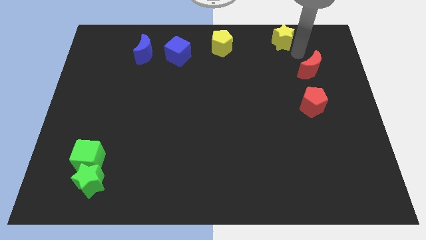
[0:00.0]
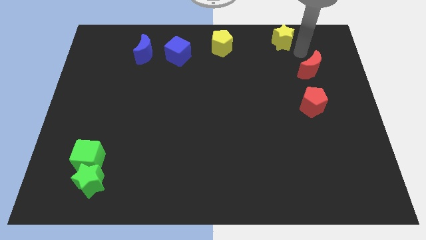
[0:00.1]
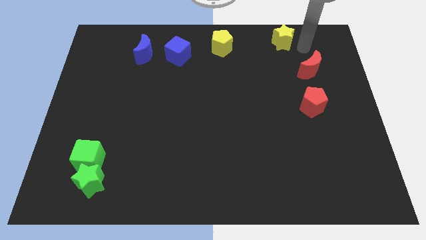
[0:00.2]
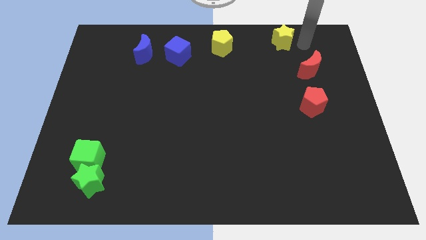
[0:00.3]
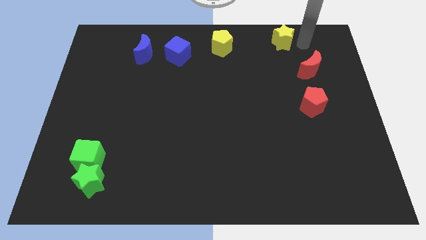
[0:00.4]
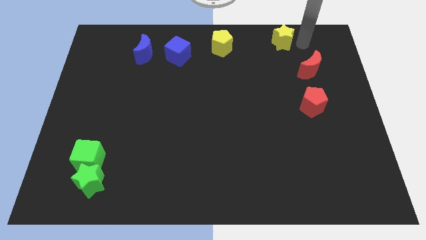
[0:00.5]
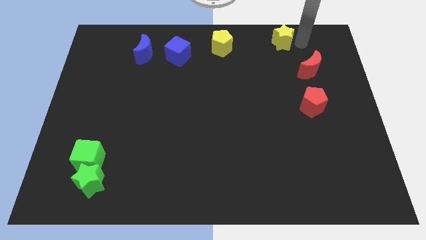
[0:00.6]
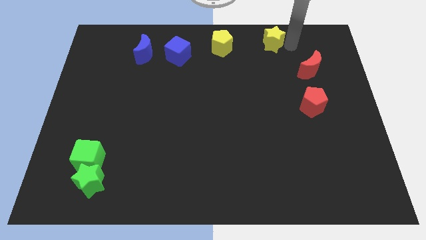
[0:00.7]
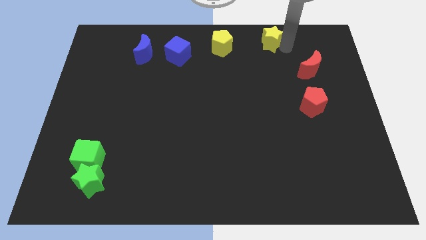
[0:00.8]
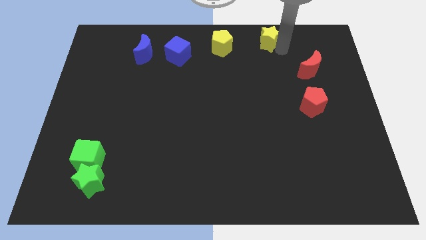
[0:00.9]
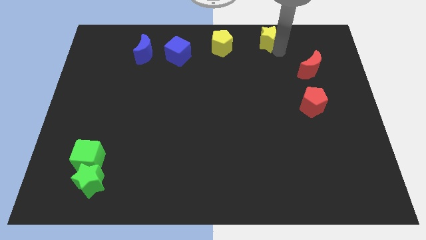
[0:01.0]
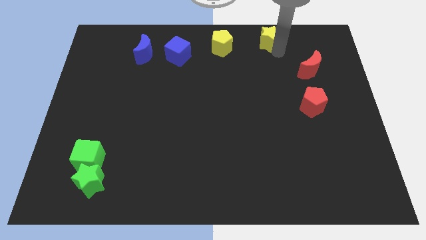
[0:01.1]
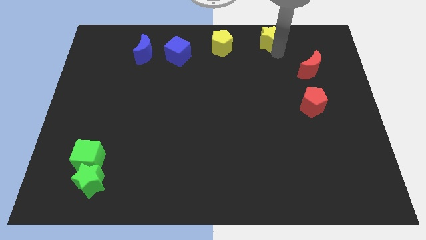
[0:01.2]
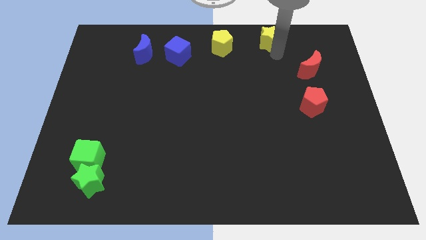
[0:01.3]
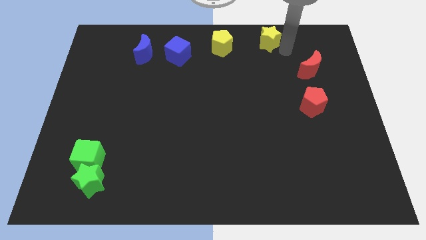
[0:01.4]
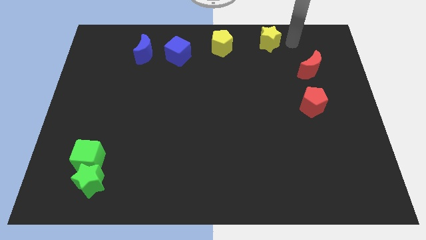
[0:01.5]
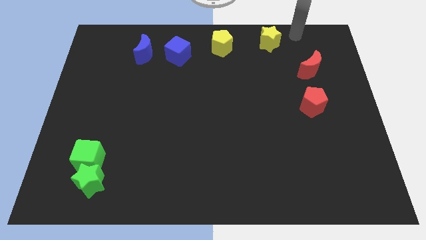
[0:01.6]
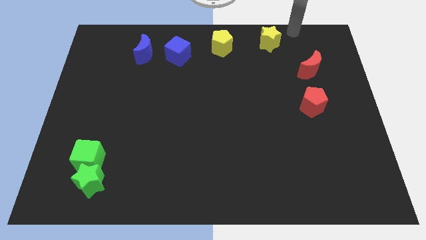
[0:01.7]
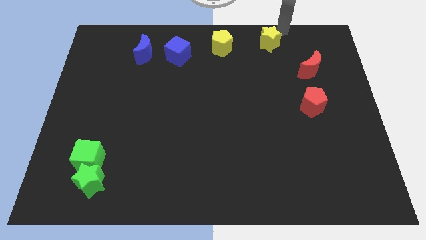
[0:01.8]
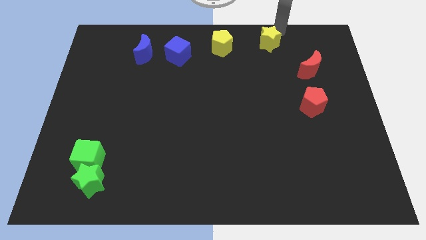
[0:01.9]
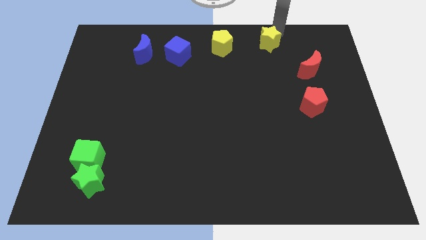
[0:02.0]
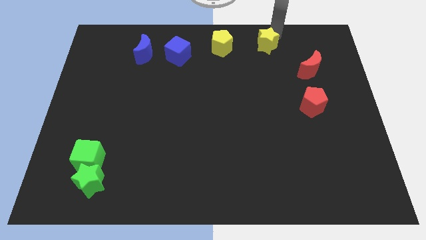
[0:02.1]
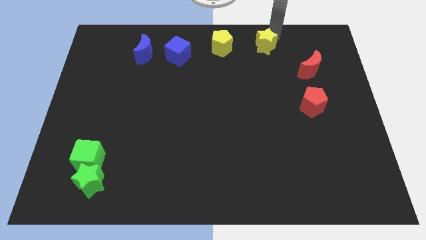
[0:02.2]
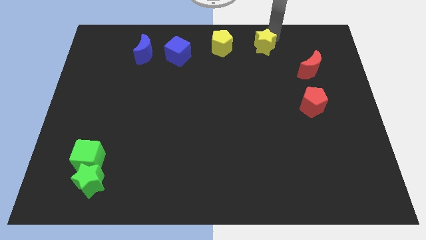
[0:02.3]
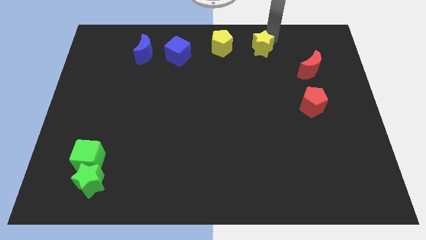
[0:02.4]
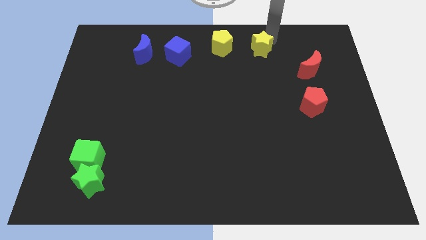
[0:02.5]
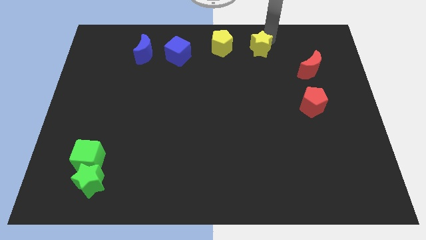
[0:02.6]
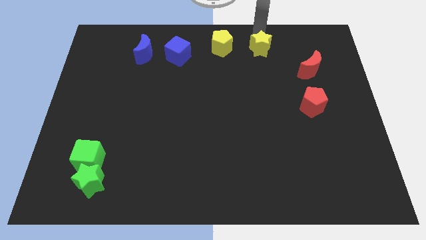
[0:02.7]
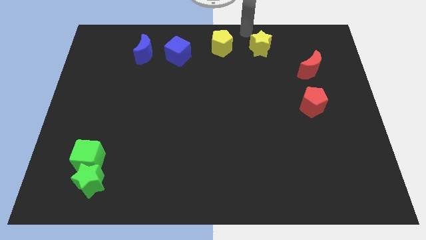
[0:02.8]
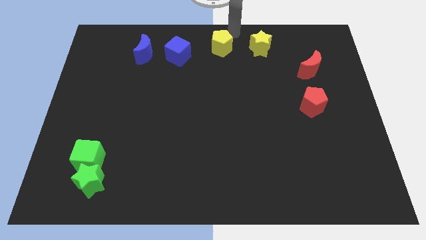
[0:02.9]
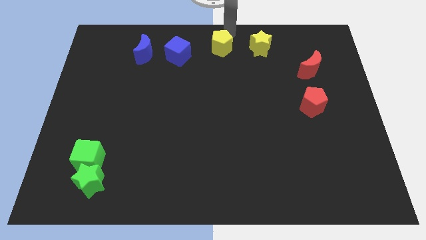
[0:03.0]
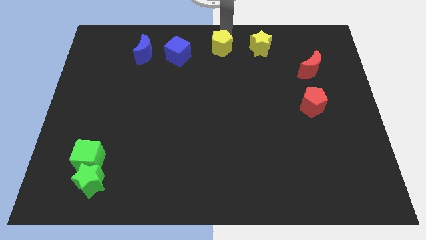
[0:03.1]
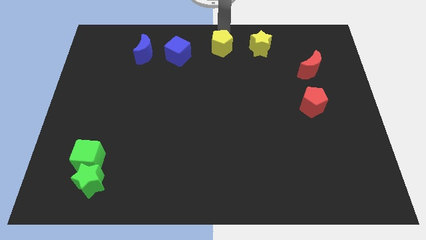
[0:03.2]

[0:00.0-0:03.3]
push the yellow star slightly to the left

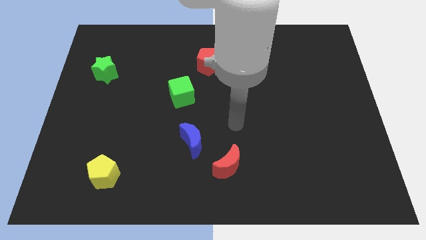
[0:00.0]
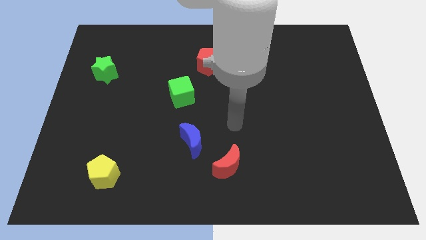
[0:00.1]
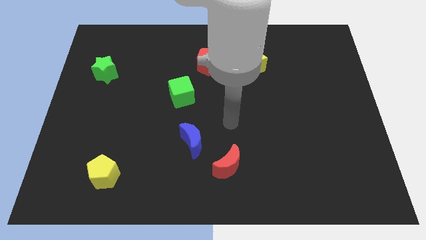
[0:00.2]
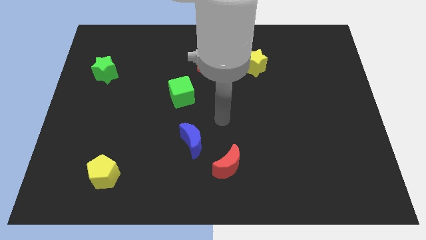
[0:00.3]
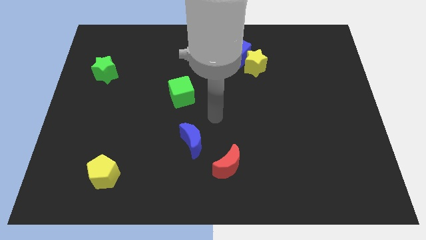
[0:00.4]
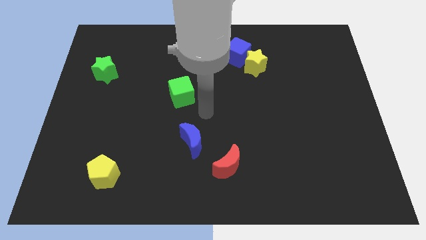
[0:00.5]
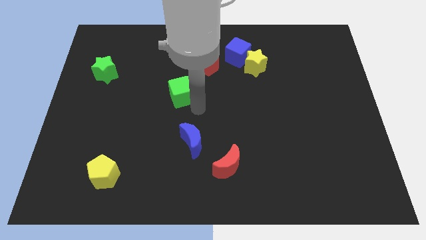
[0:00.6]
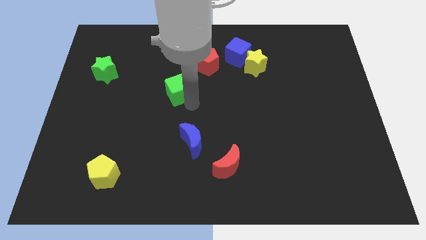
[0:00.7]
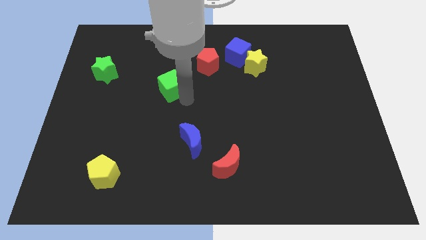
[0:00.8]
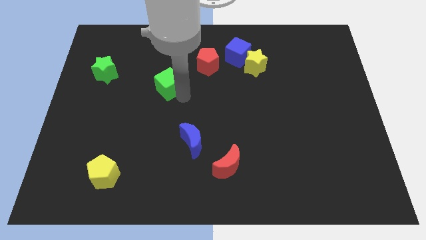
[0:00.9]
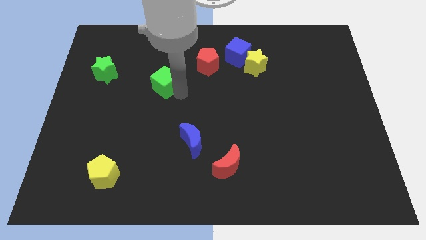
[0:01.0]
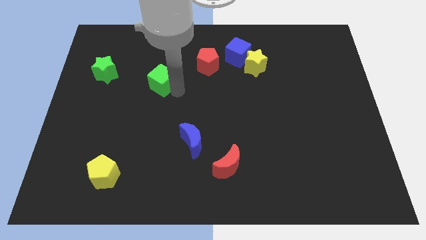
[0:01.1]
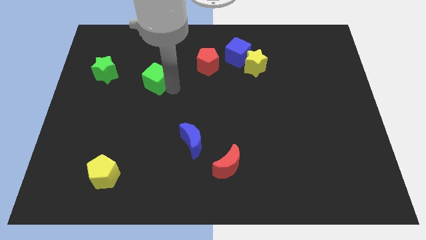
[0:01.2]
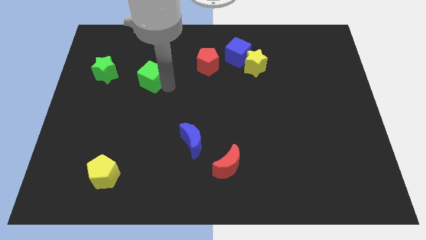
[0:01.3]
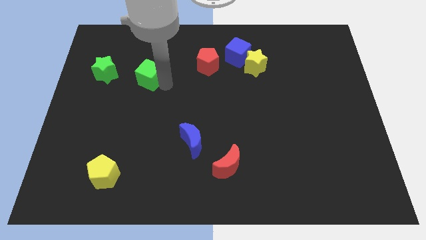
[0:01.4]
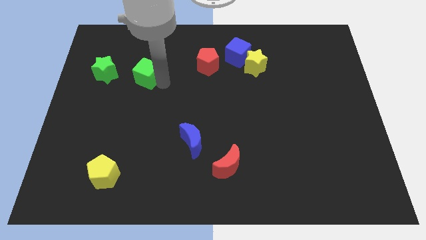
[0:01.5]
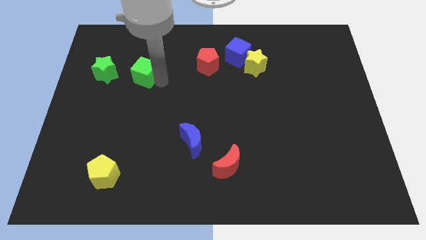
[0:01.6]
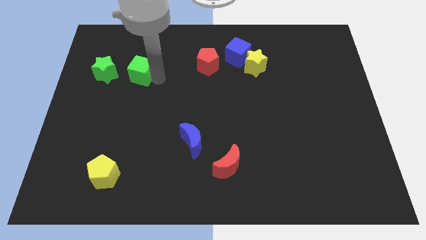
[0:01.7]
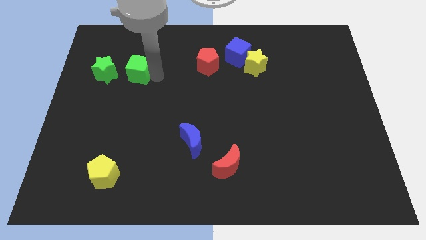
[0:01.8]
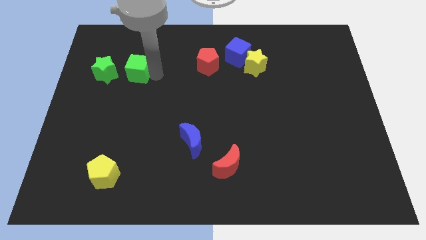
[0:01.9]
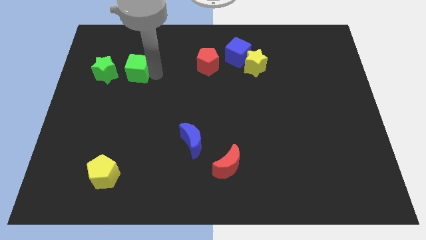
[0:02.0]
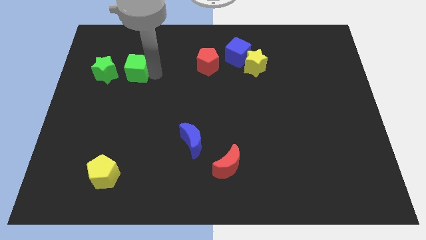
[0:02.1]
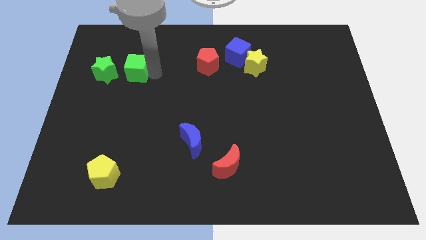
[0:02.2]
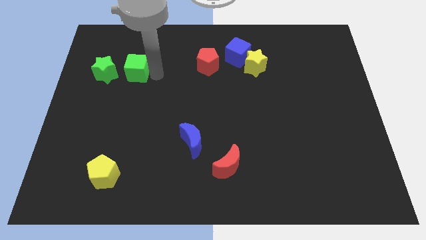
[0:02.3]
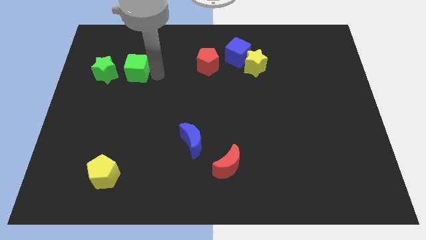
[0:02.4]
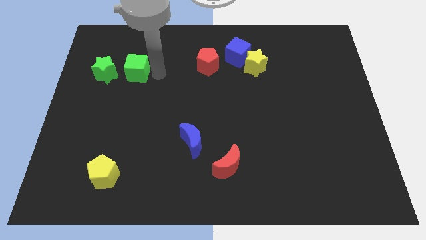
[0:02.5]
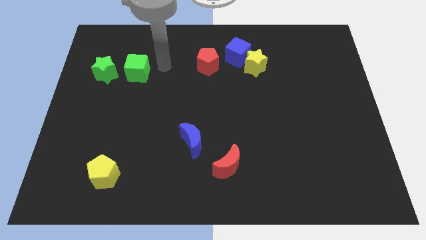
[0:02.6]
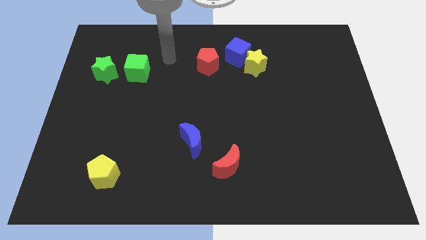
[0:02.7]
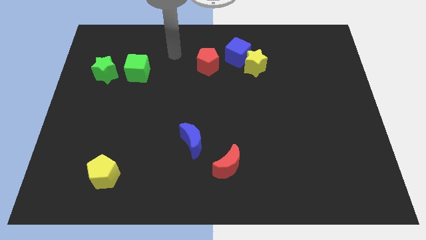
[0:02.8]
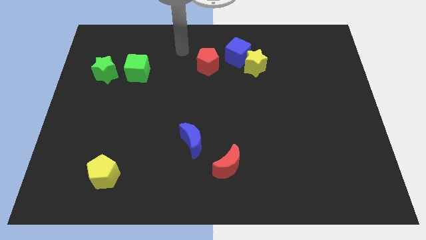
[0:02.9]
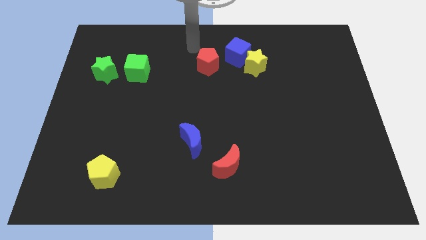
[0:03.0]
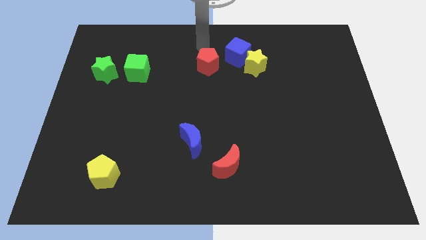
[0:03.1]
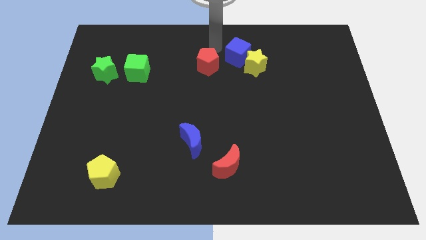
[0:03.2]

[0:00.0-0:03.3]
move the green cube to the right side of the green star

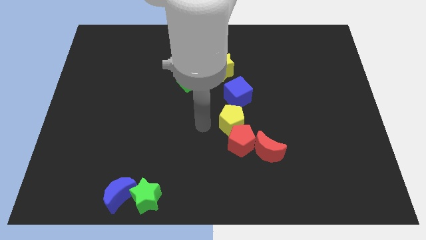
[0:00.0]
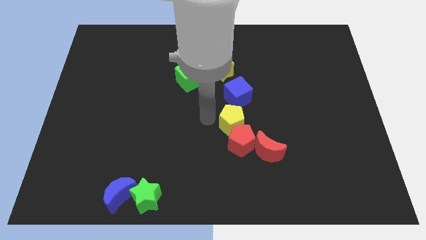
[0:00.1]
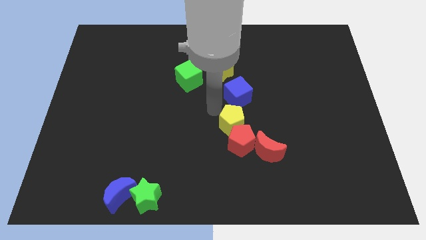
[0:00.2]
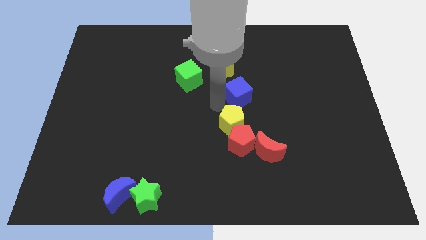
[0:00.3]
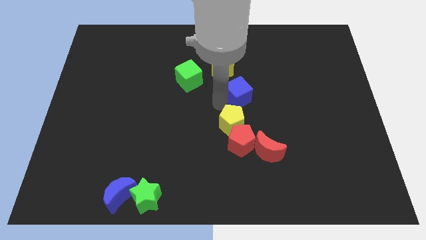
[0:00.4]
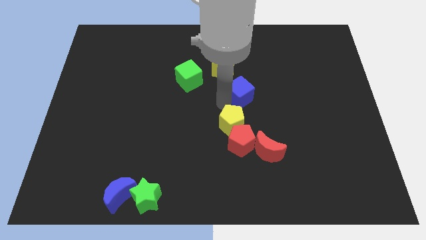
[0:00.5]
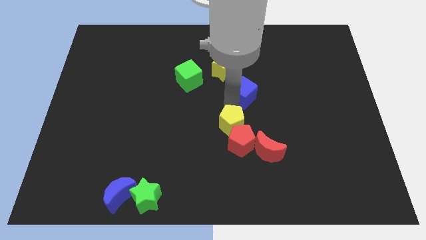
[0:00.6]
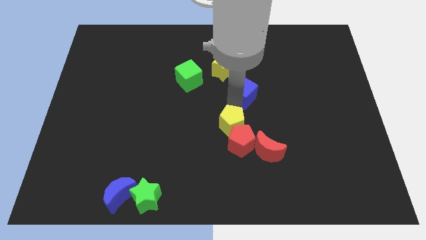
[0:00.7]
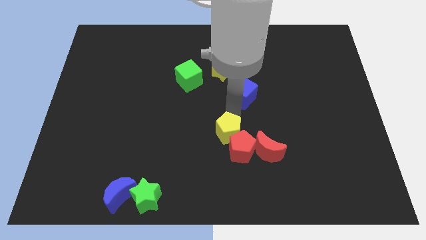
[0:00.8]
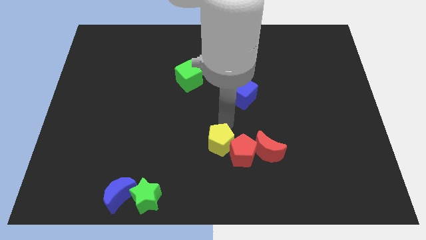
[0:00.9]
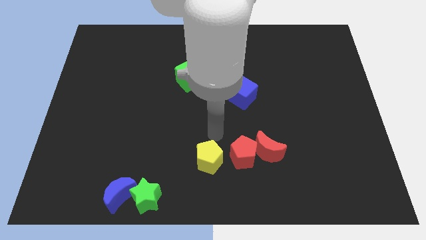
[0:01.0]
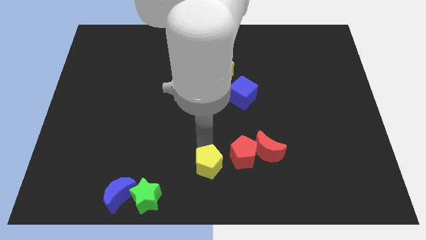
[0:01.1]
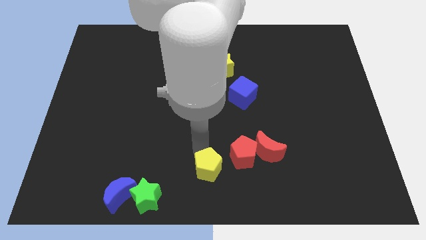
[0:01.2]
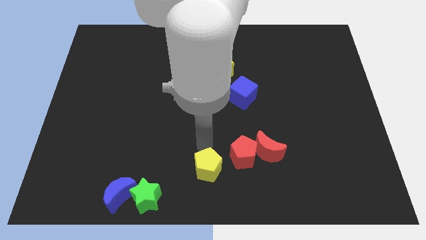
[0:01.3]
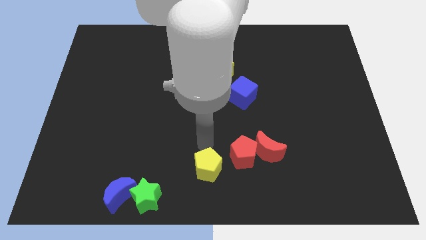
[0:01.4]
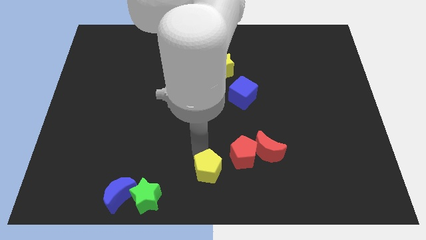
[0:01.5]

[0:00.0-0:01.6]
separate the yellow pentagon and the red pentagon

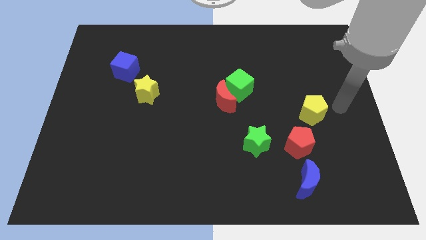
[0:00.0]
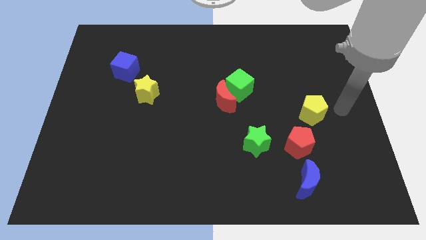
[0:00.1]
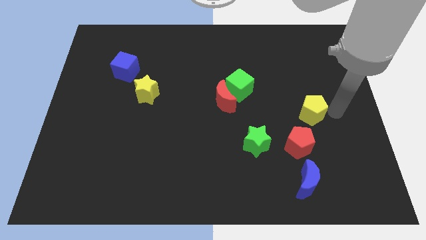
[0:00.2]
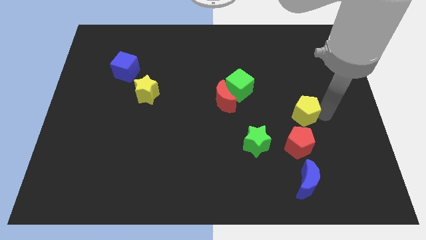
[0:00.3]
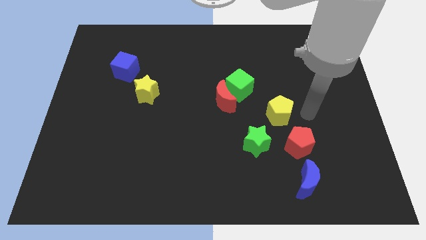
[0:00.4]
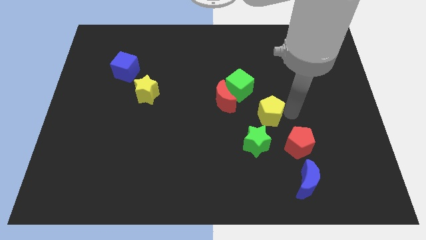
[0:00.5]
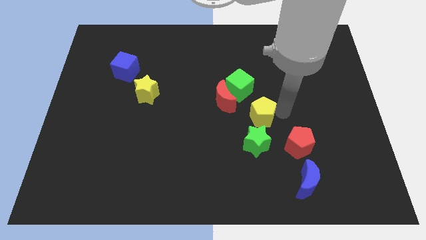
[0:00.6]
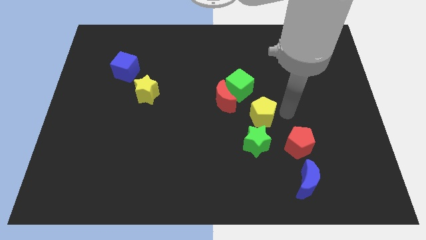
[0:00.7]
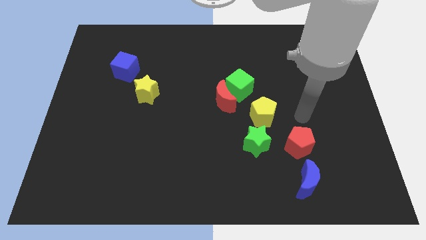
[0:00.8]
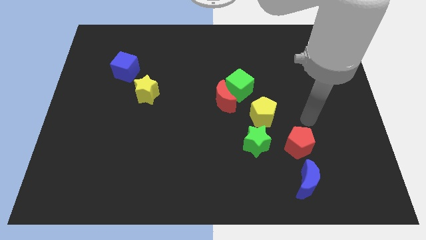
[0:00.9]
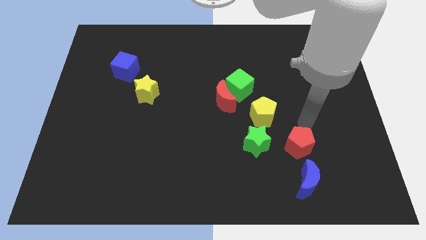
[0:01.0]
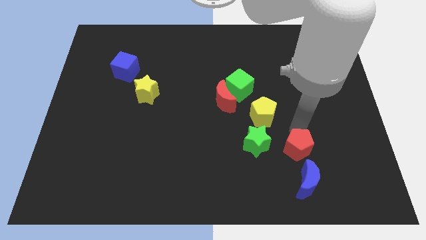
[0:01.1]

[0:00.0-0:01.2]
place yellow pentagon to the top of green star
